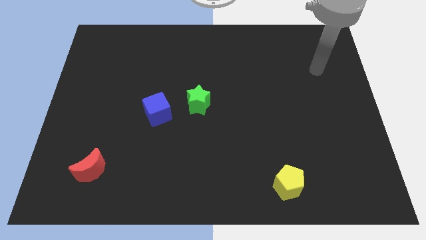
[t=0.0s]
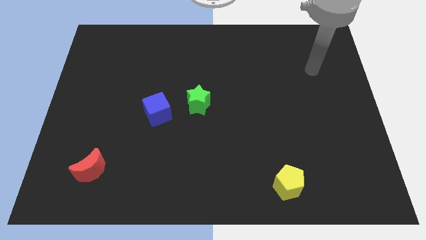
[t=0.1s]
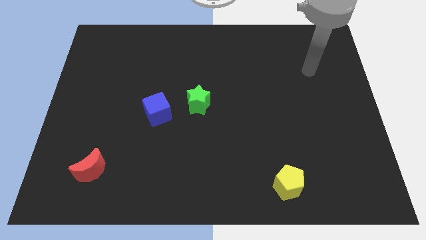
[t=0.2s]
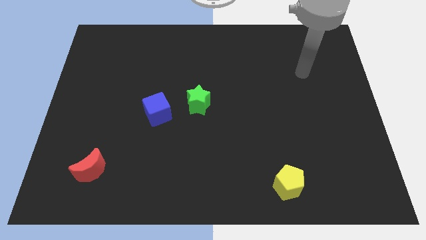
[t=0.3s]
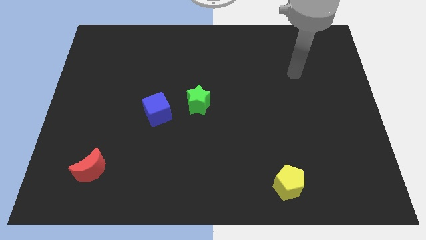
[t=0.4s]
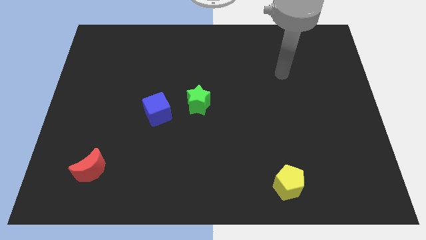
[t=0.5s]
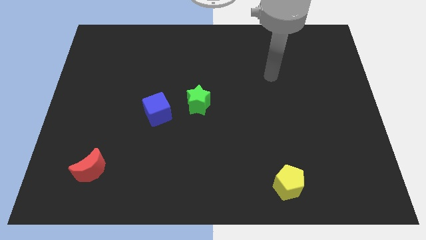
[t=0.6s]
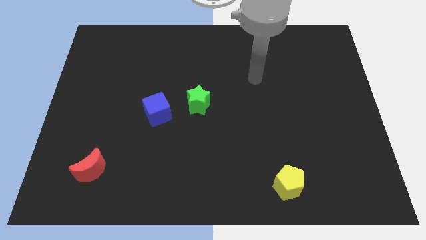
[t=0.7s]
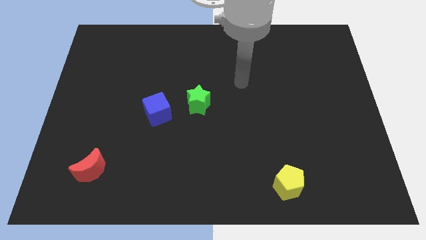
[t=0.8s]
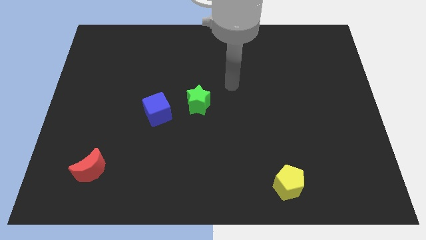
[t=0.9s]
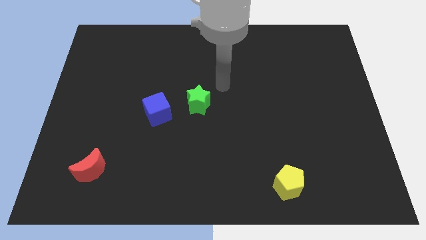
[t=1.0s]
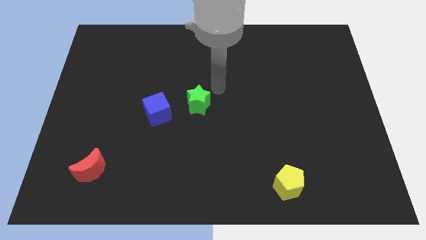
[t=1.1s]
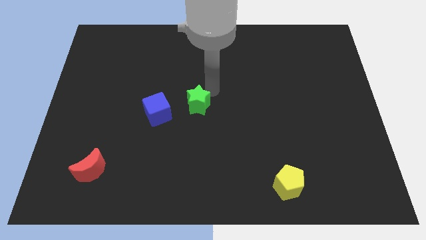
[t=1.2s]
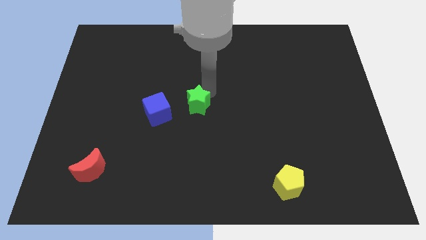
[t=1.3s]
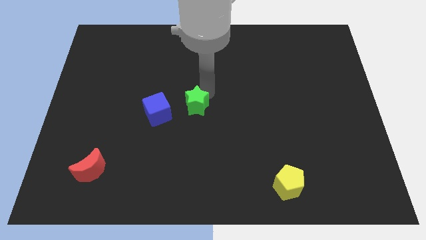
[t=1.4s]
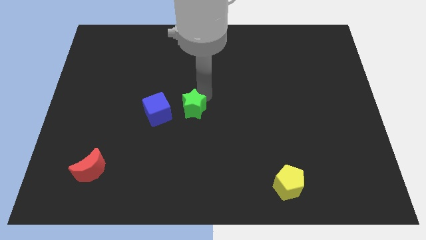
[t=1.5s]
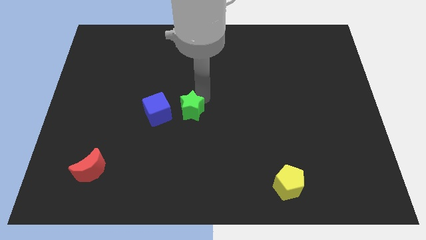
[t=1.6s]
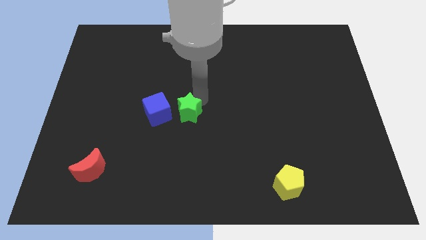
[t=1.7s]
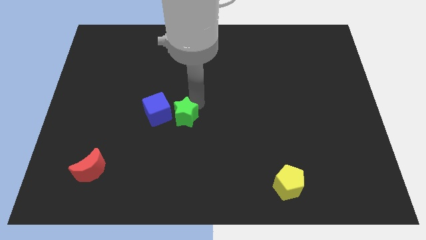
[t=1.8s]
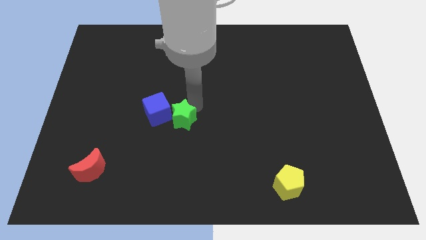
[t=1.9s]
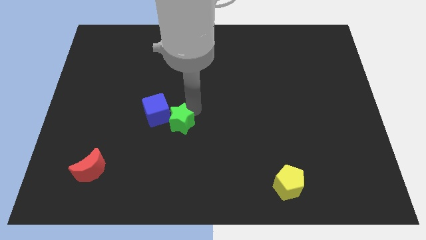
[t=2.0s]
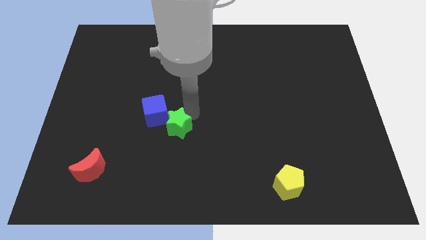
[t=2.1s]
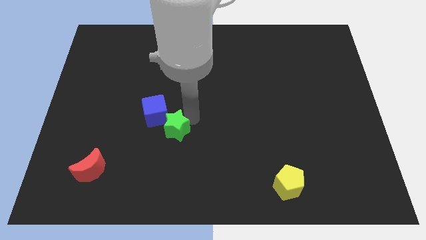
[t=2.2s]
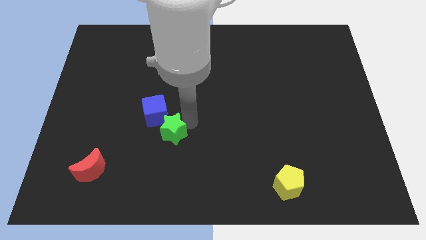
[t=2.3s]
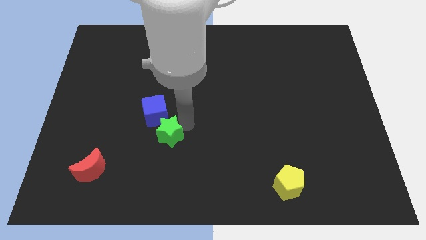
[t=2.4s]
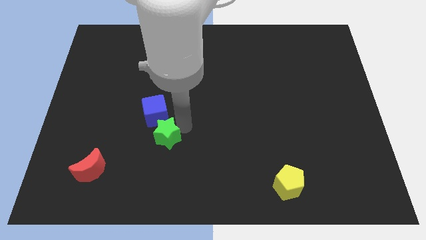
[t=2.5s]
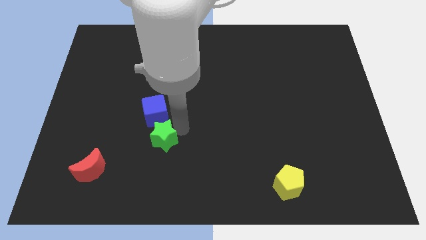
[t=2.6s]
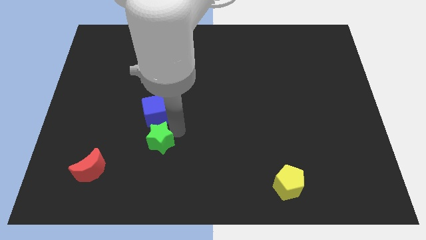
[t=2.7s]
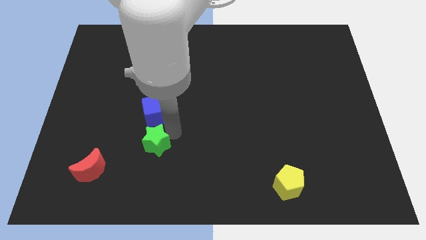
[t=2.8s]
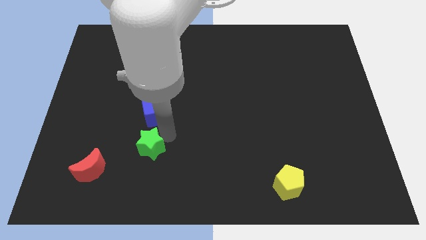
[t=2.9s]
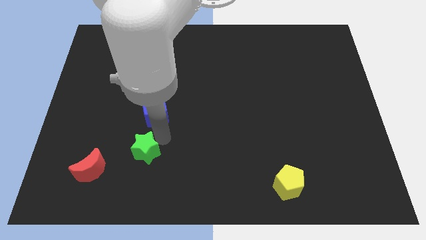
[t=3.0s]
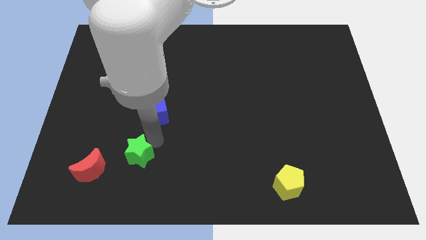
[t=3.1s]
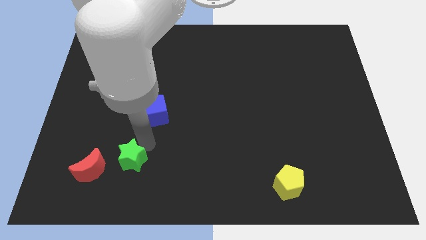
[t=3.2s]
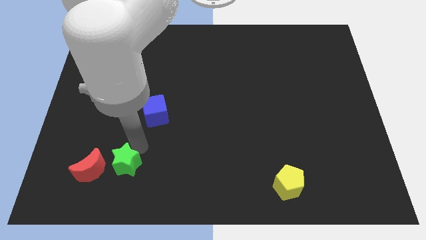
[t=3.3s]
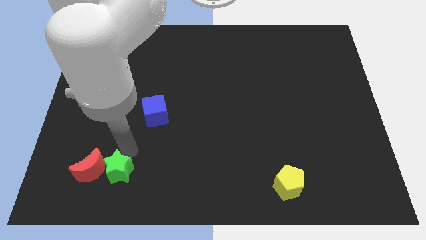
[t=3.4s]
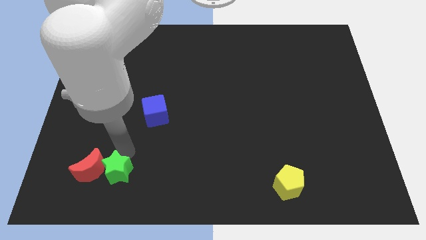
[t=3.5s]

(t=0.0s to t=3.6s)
slide the green star towards the moon

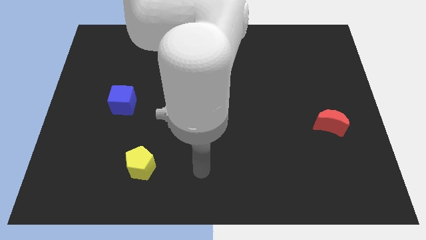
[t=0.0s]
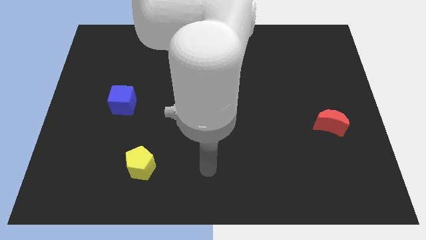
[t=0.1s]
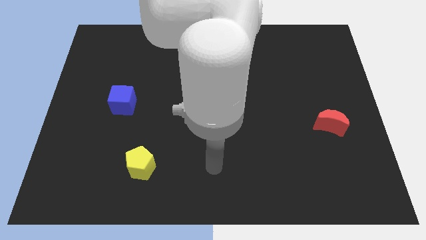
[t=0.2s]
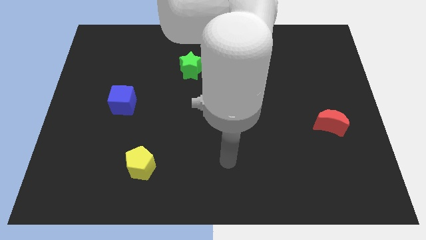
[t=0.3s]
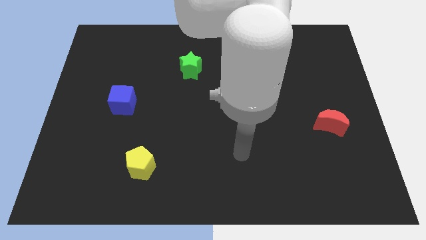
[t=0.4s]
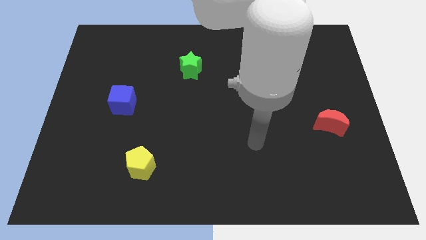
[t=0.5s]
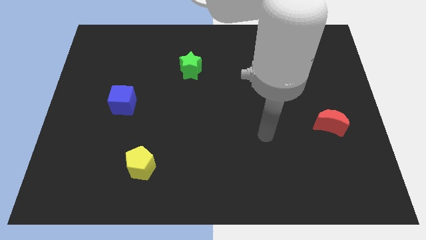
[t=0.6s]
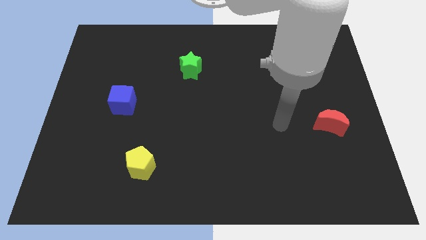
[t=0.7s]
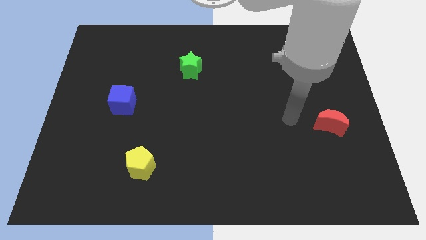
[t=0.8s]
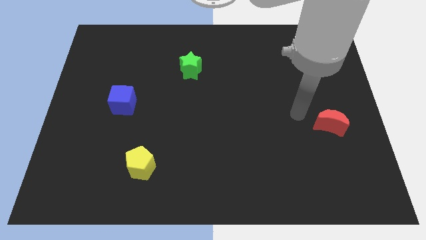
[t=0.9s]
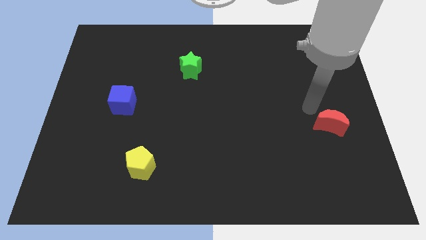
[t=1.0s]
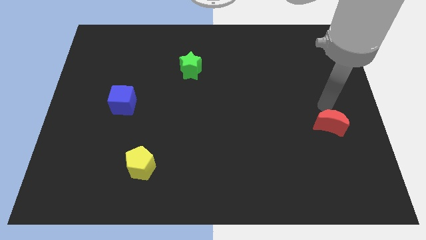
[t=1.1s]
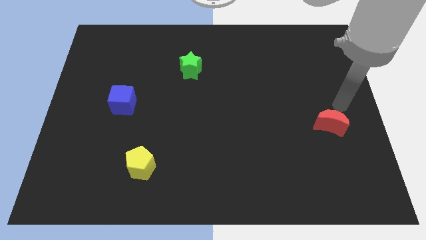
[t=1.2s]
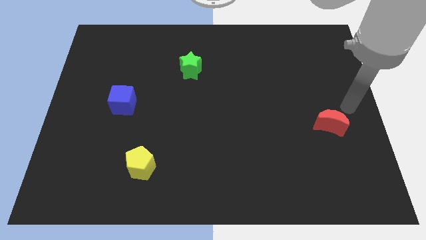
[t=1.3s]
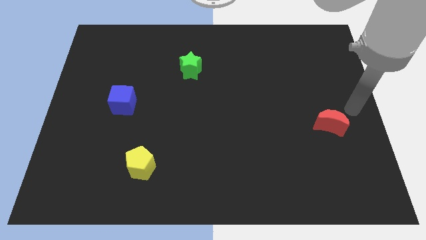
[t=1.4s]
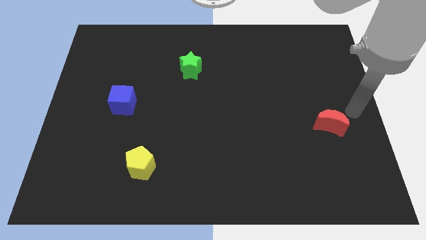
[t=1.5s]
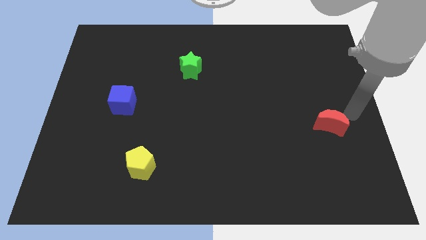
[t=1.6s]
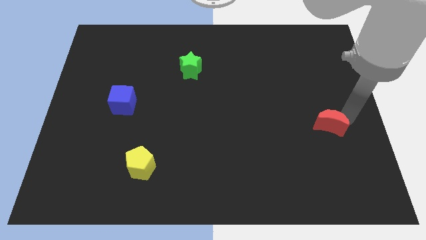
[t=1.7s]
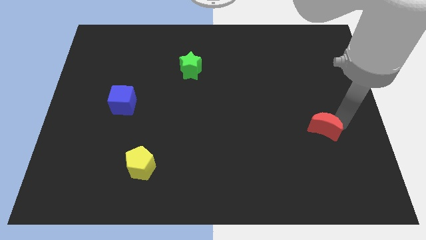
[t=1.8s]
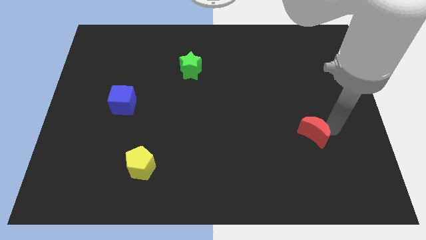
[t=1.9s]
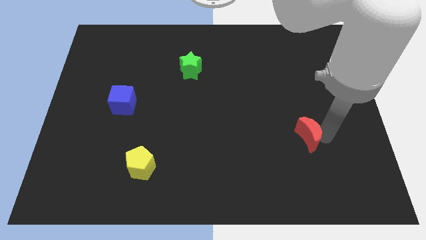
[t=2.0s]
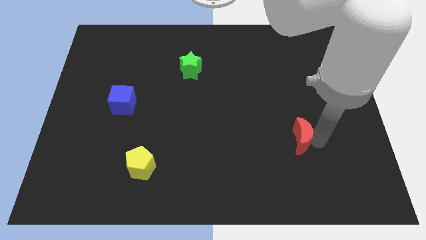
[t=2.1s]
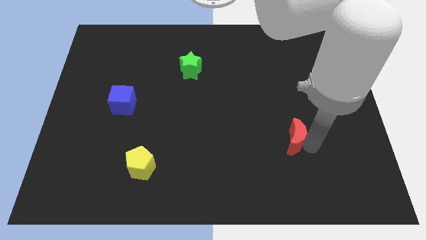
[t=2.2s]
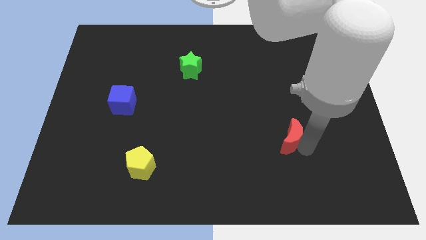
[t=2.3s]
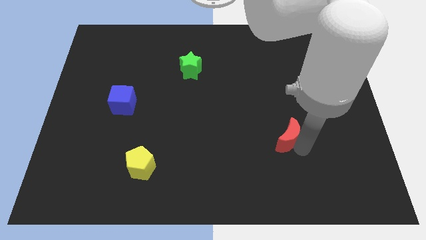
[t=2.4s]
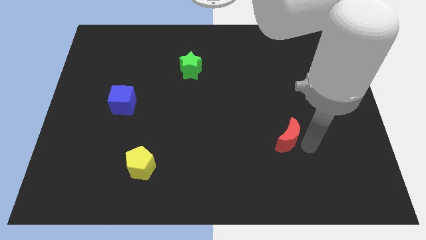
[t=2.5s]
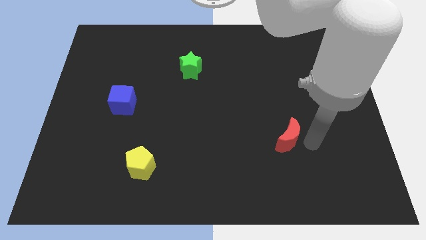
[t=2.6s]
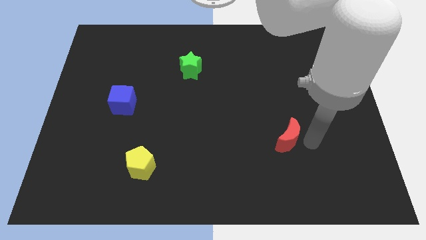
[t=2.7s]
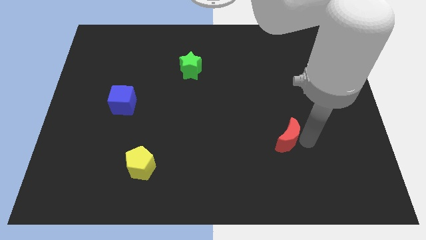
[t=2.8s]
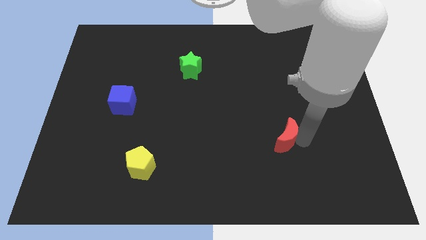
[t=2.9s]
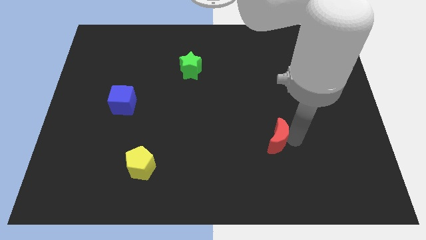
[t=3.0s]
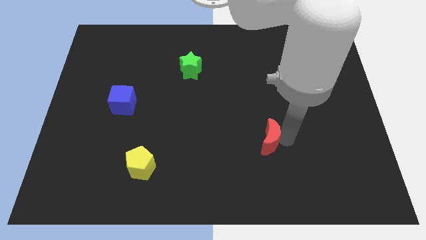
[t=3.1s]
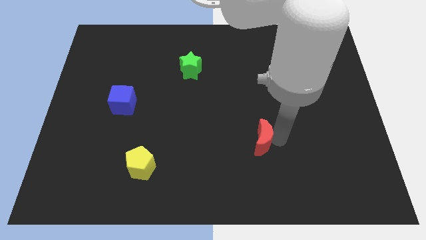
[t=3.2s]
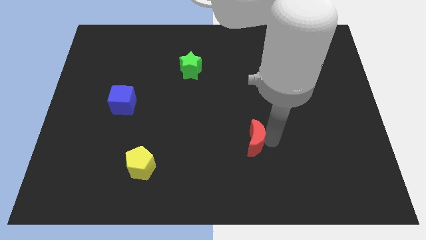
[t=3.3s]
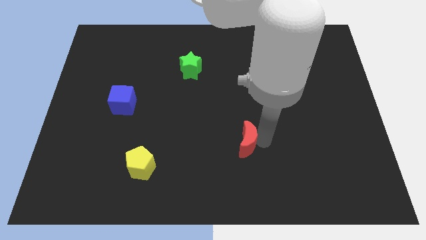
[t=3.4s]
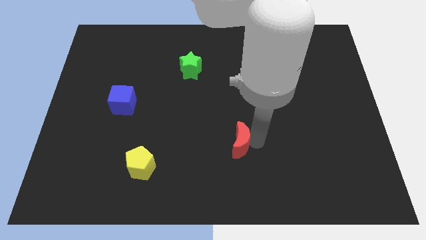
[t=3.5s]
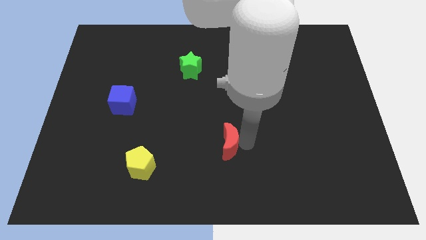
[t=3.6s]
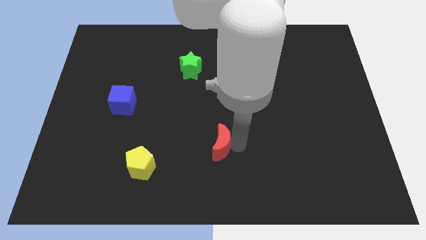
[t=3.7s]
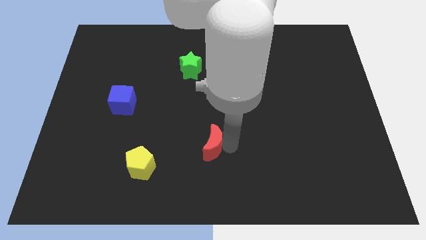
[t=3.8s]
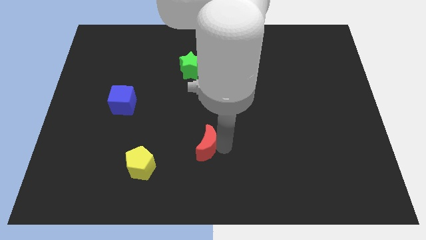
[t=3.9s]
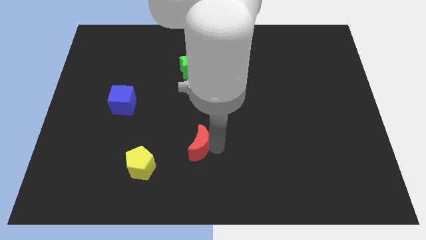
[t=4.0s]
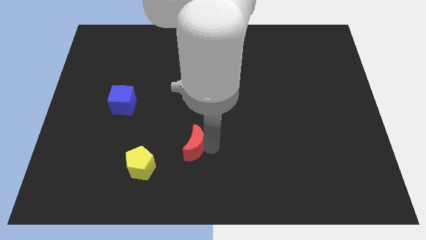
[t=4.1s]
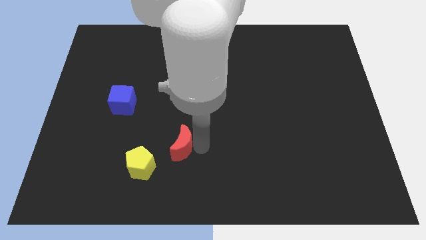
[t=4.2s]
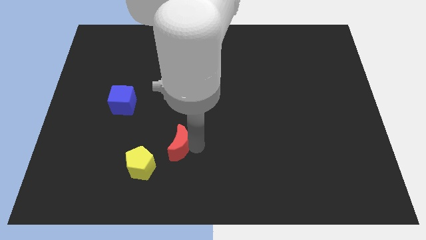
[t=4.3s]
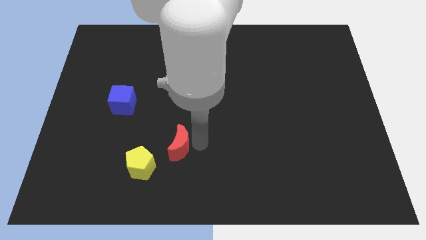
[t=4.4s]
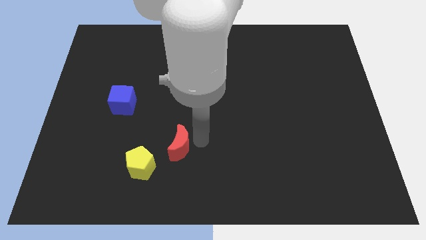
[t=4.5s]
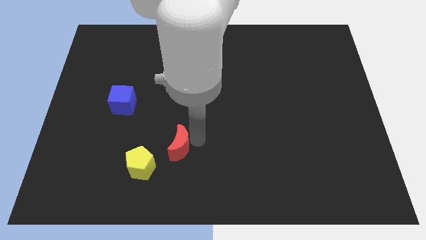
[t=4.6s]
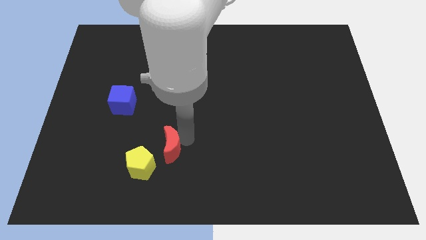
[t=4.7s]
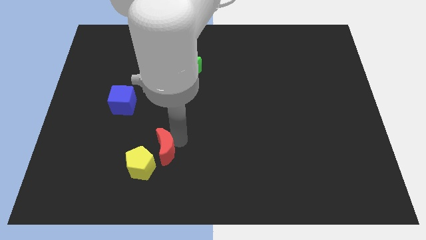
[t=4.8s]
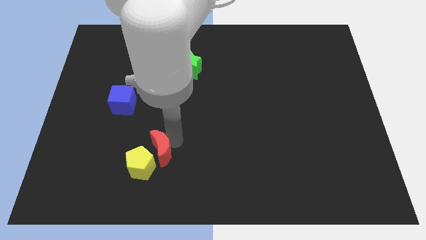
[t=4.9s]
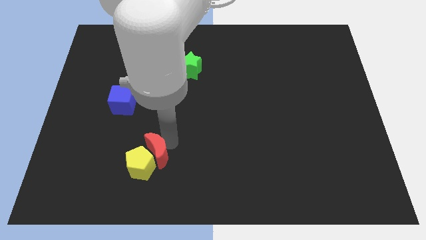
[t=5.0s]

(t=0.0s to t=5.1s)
push the moon close to the yellow block
